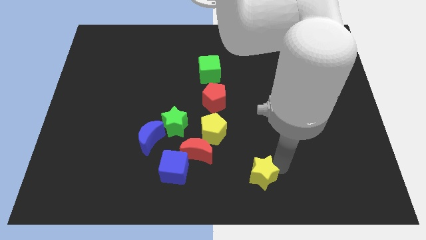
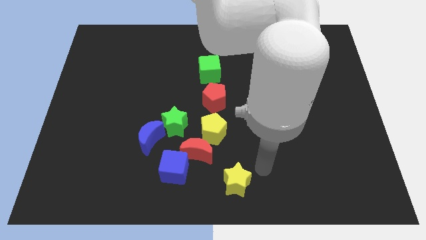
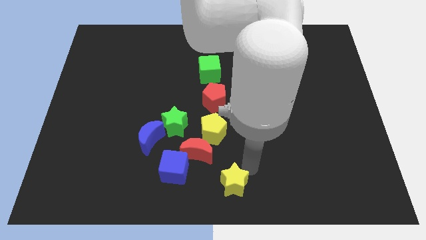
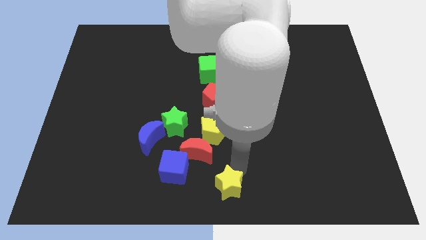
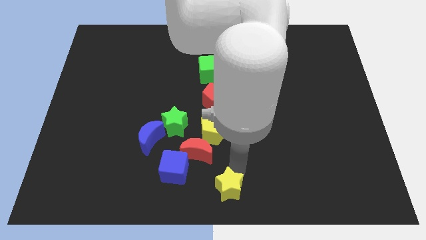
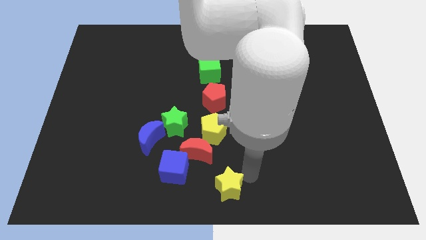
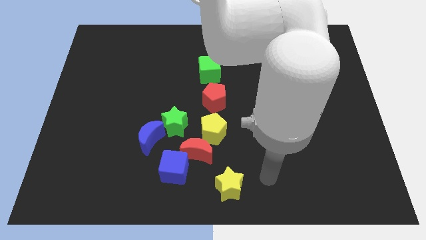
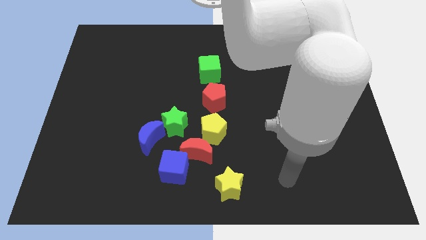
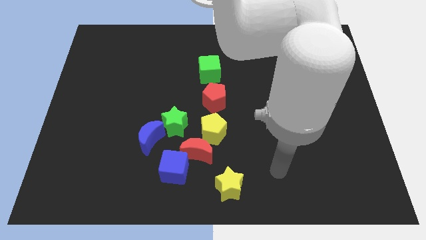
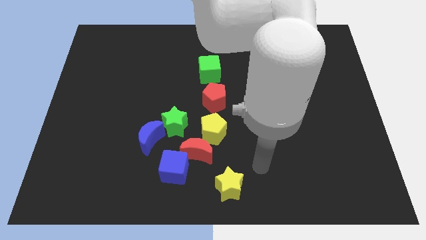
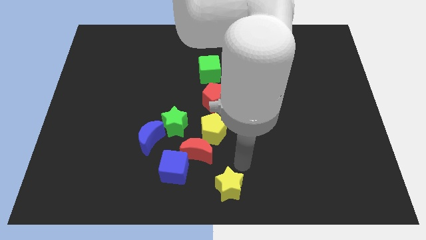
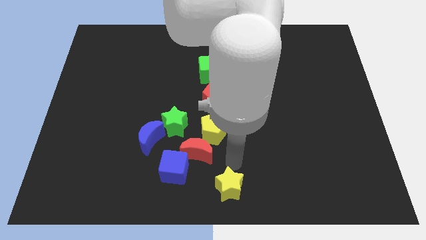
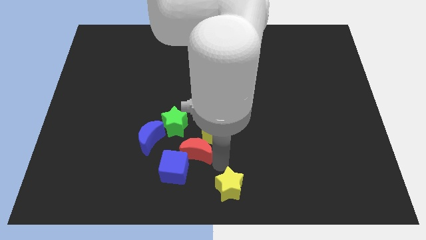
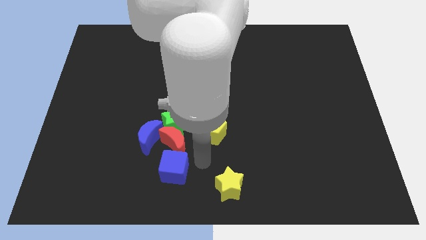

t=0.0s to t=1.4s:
move the yellow star to the bottom center of the board

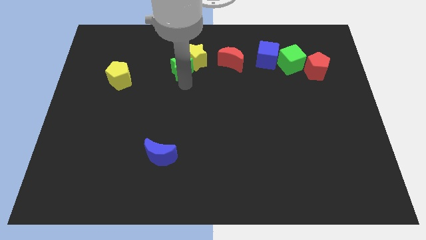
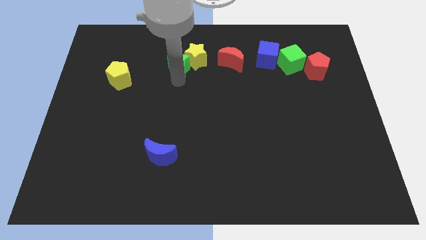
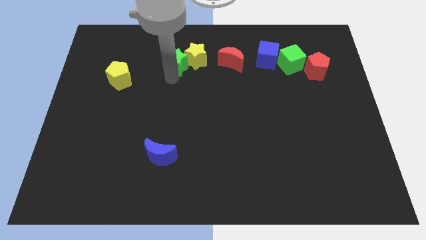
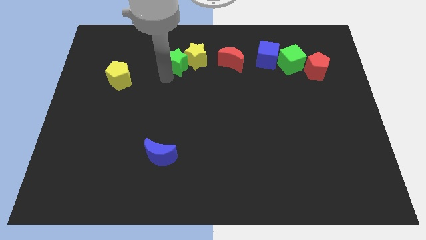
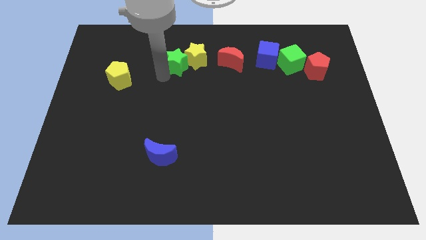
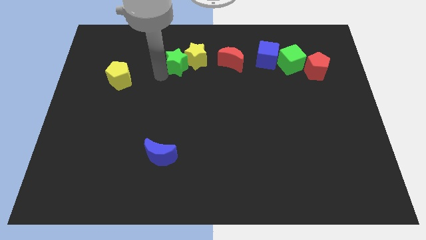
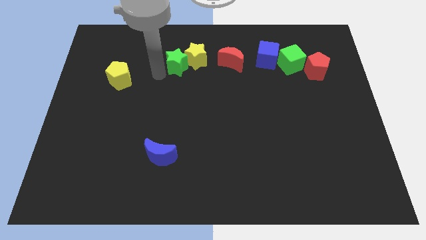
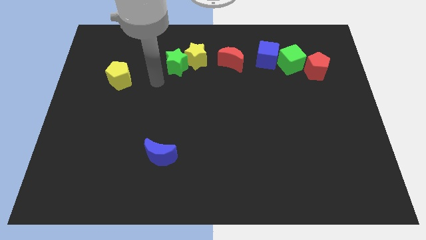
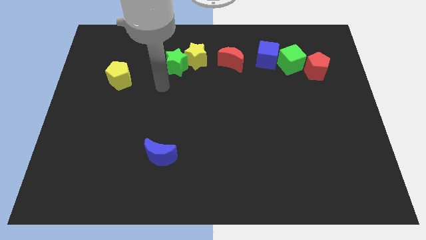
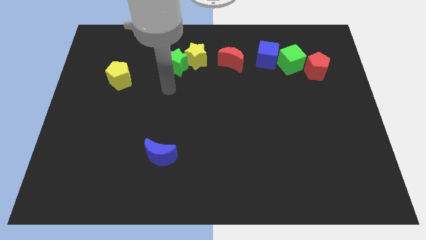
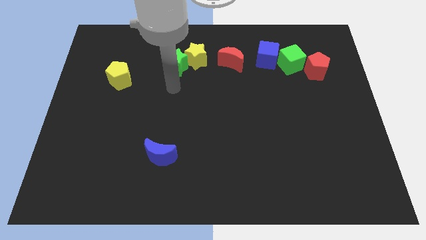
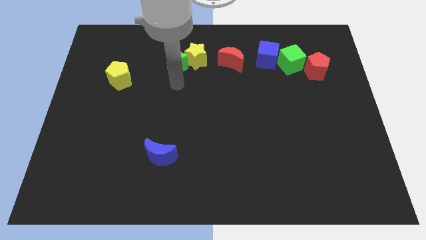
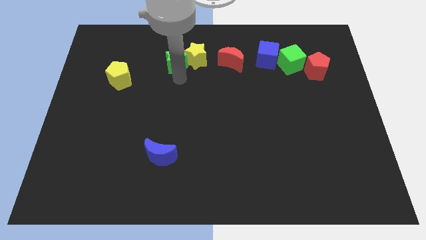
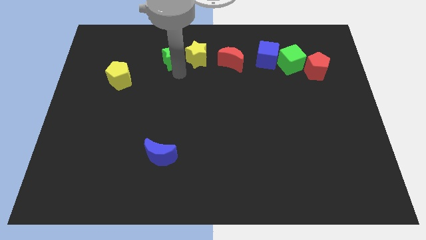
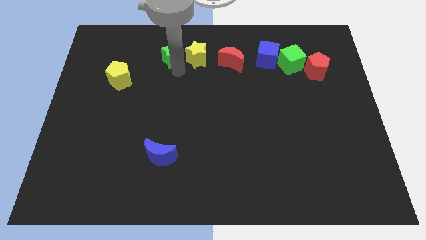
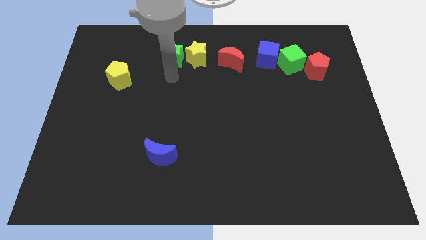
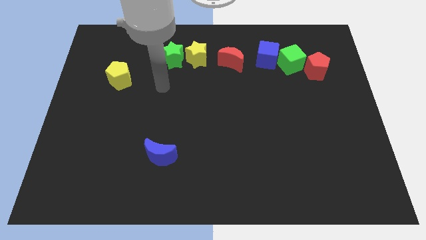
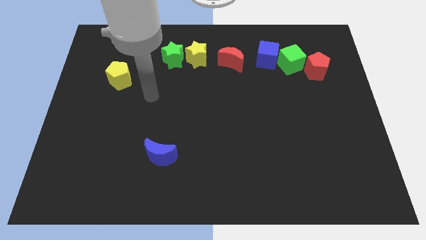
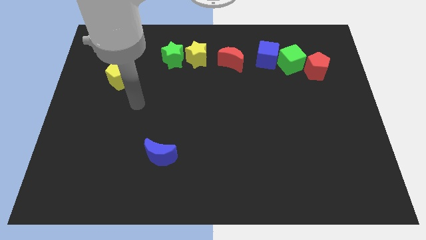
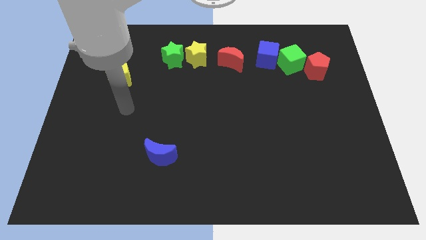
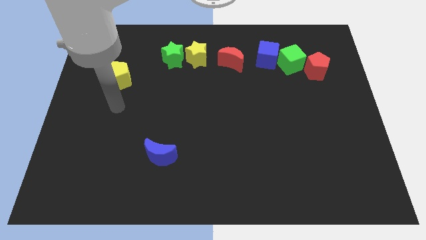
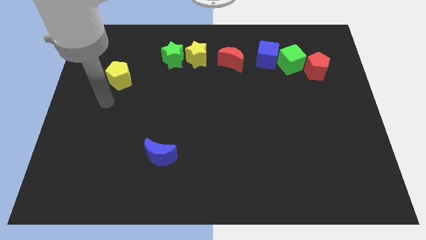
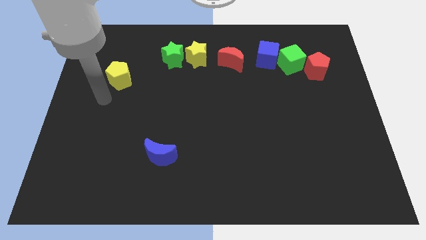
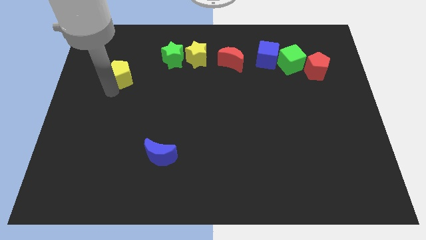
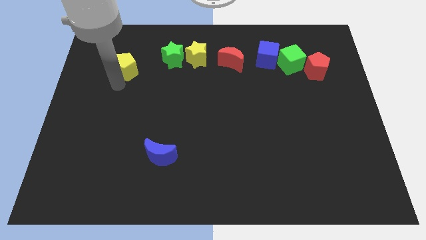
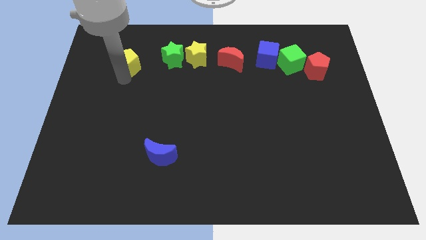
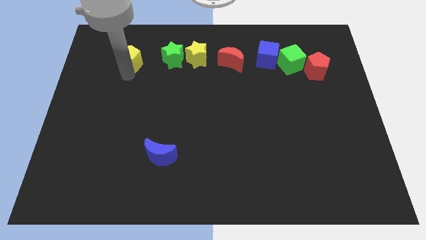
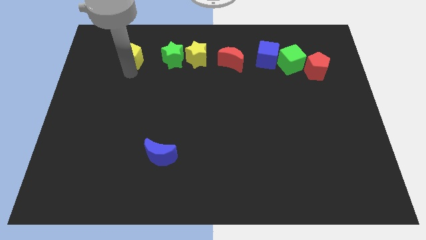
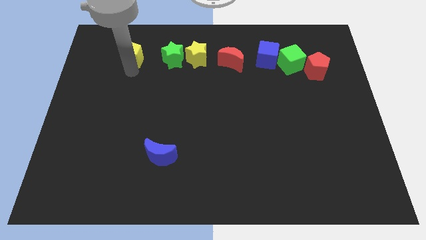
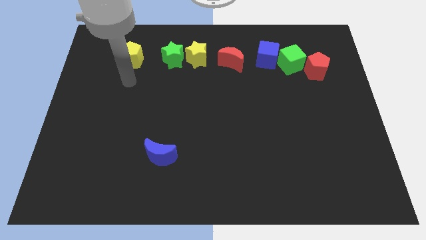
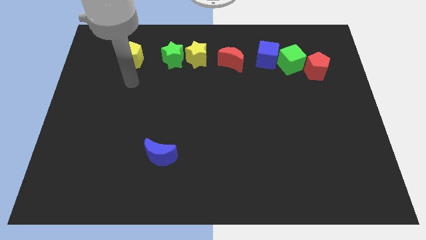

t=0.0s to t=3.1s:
slide the yellow pentagon to the left of the green star

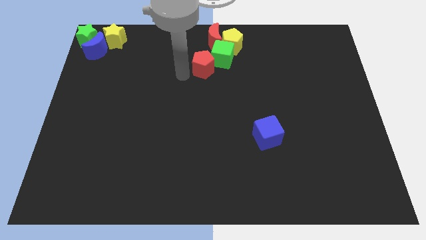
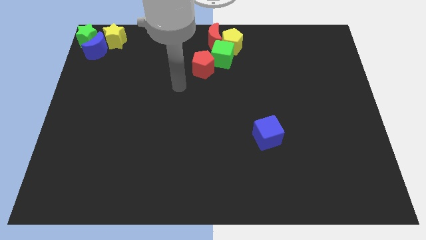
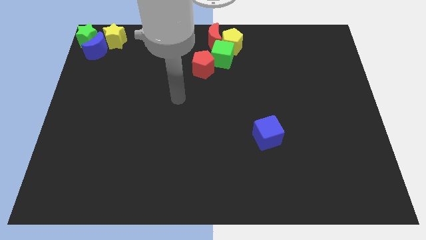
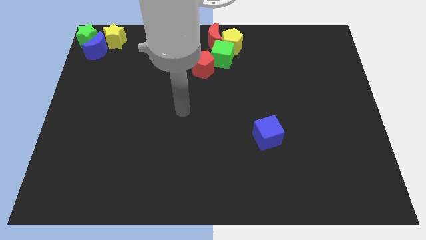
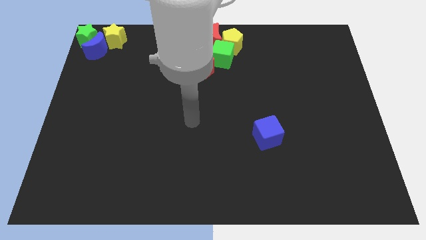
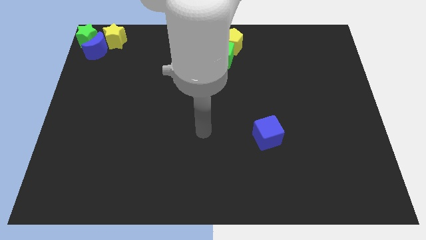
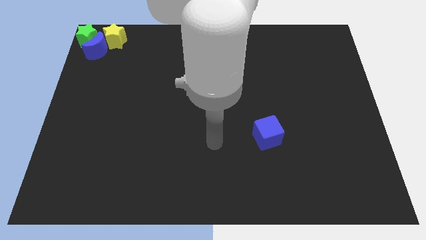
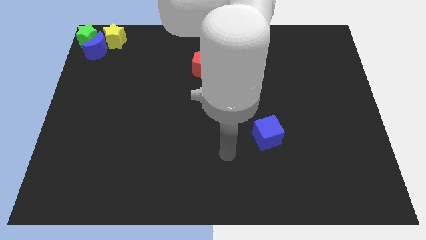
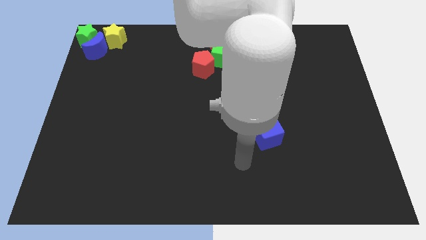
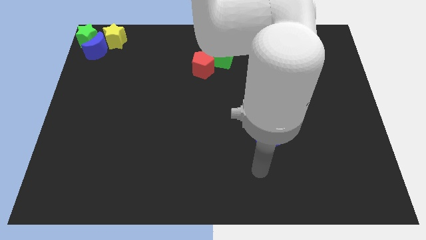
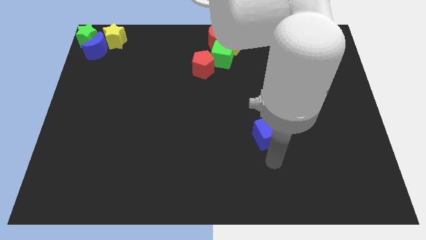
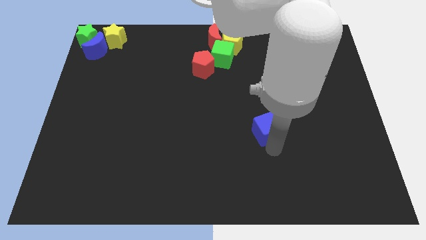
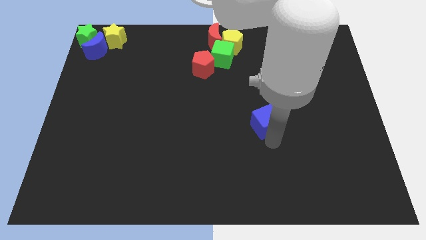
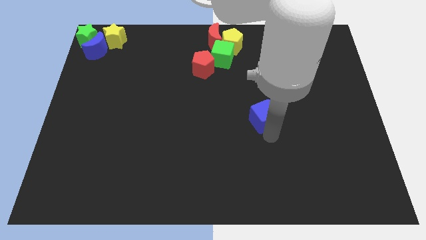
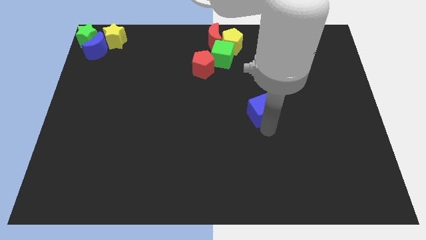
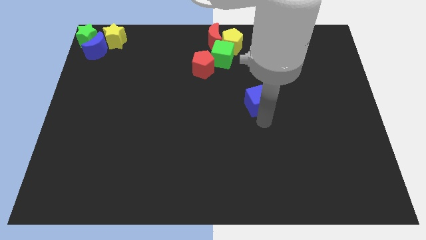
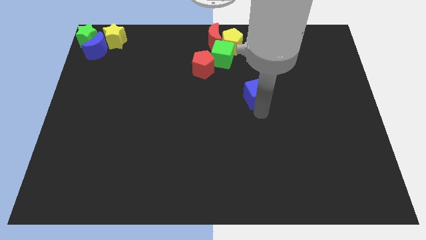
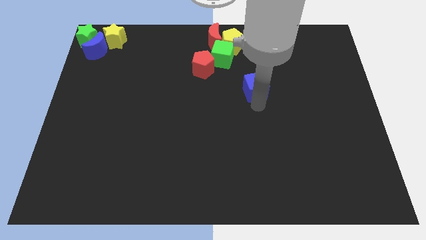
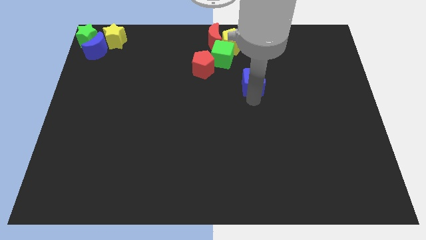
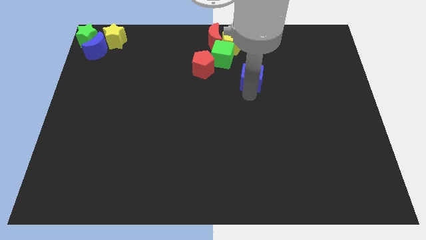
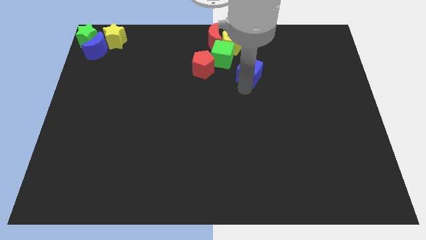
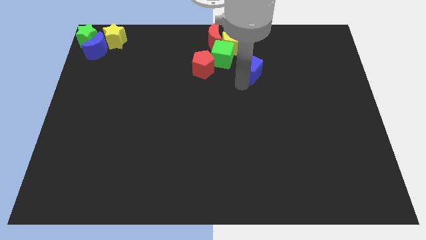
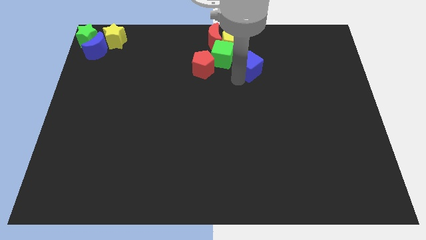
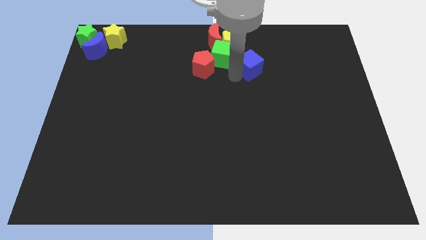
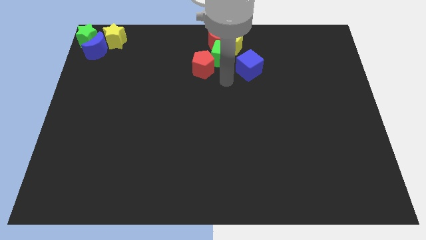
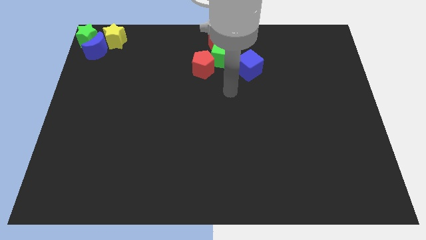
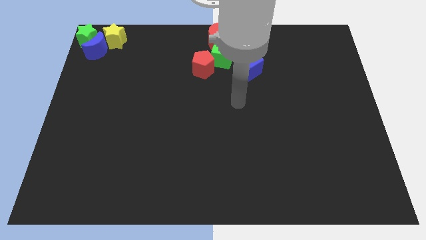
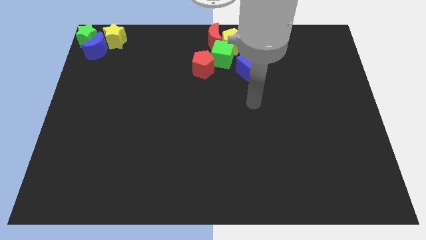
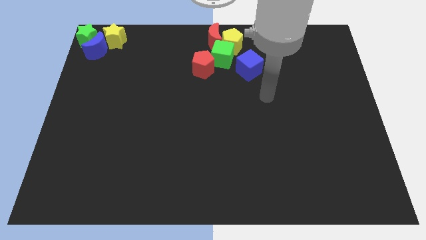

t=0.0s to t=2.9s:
place blue cube to the right side of the green cube

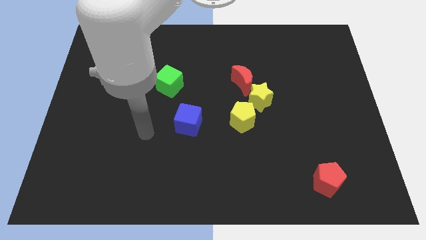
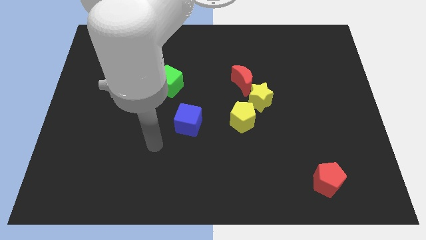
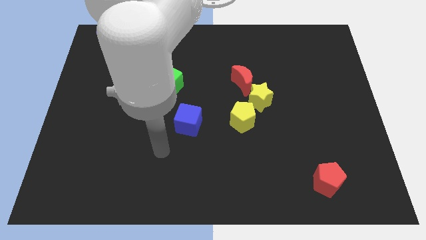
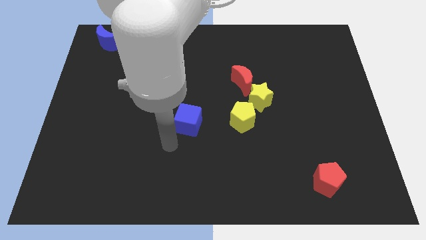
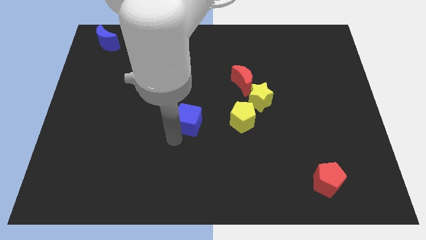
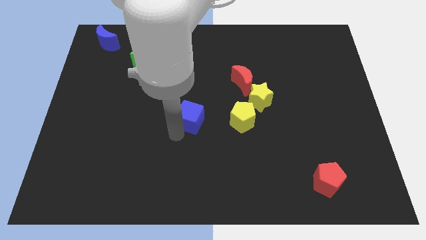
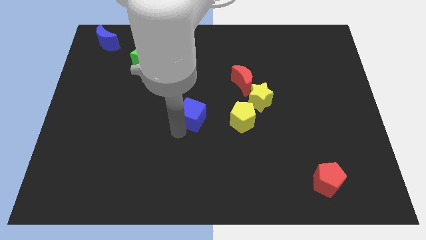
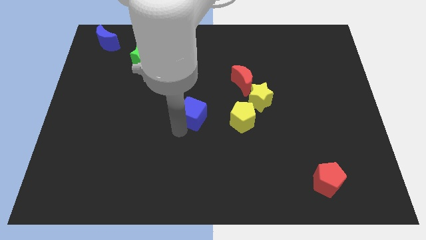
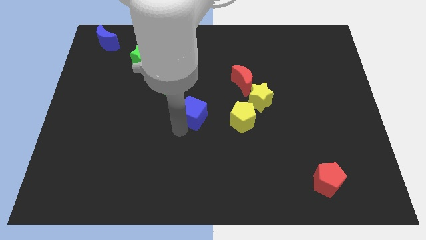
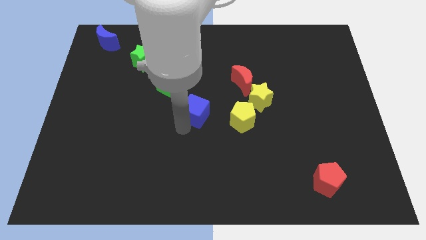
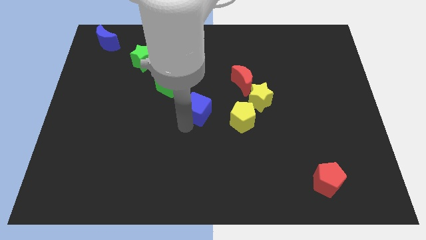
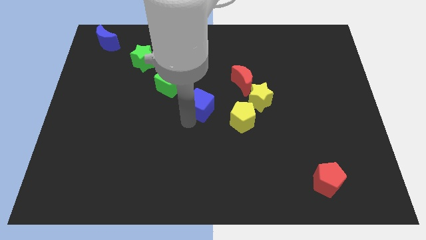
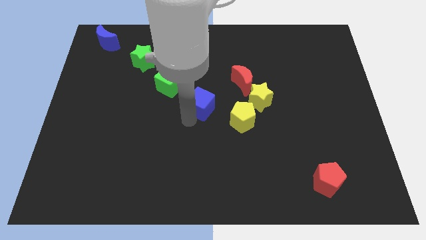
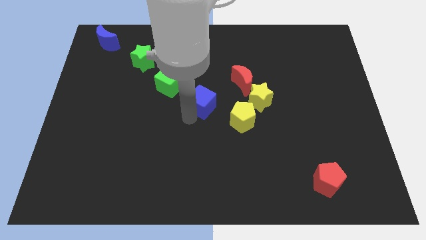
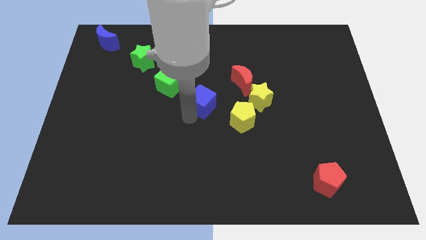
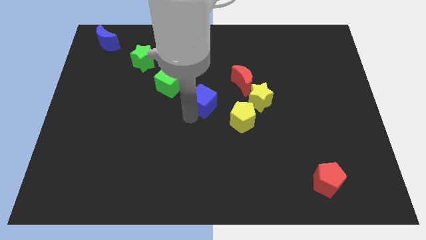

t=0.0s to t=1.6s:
place the blue cube in between green cube and yellow pentagon

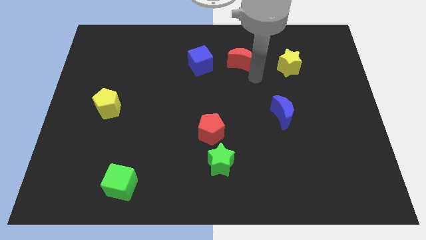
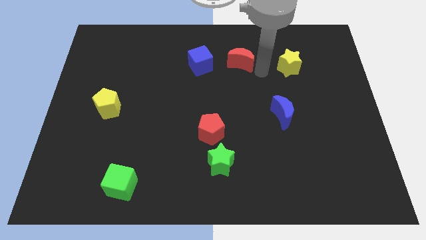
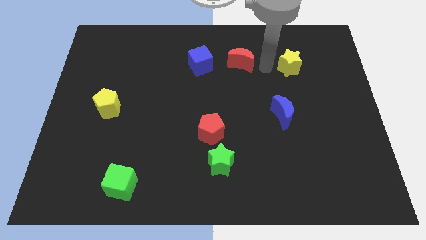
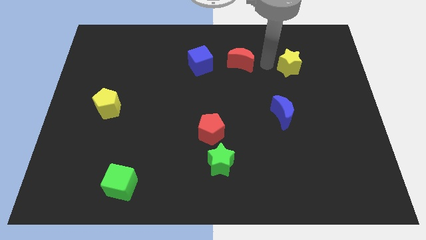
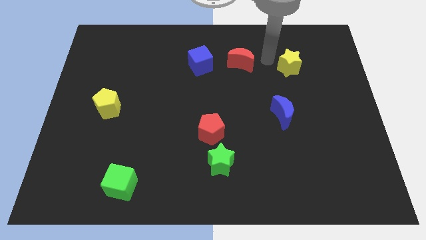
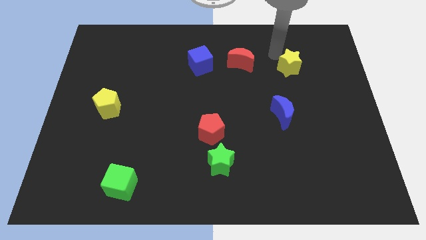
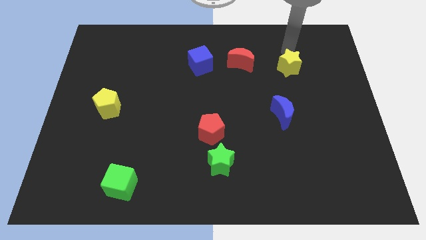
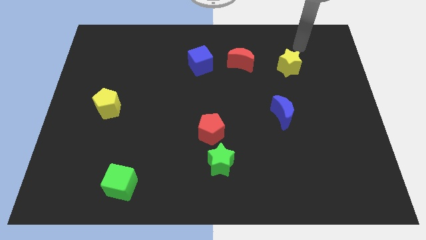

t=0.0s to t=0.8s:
move your arm towards the yellow star
